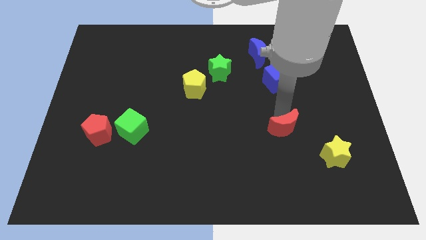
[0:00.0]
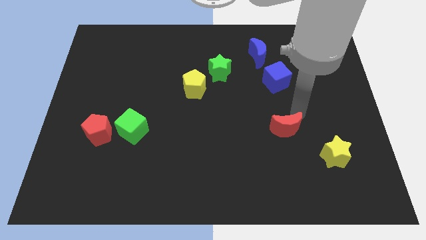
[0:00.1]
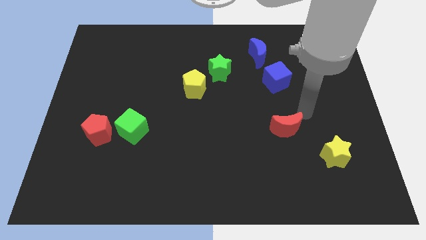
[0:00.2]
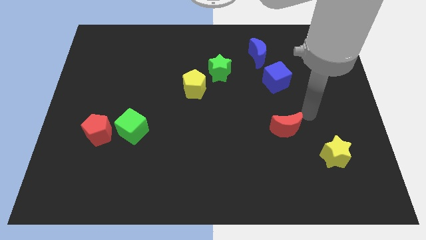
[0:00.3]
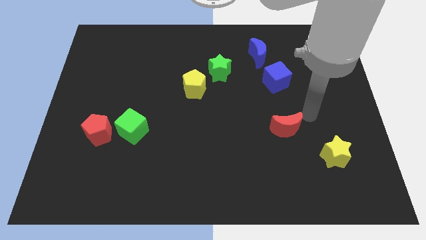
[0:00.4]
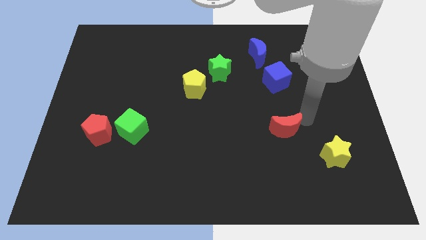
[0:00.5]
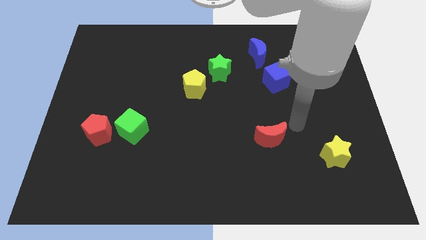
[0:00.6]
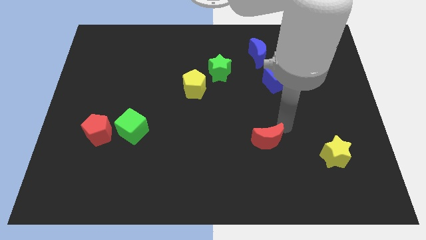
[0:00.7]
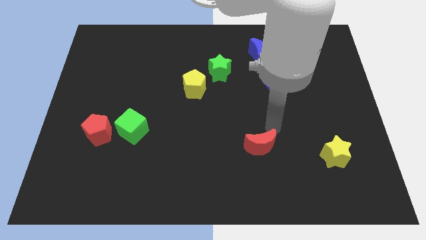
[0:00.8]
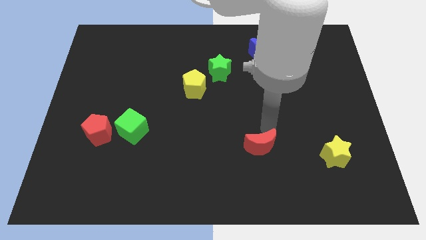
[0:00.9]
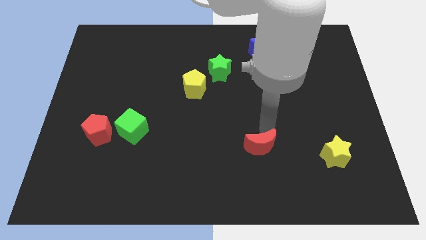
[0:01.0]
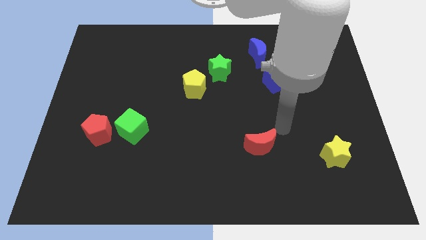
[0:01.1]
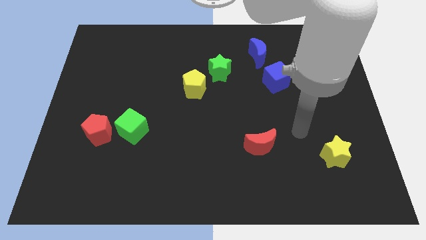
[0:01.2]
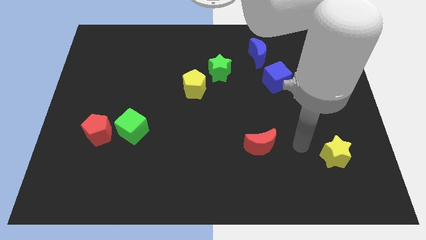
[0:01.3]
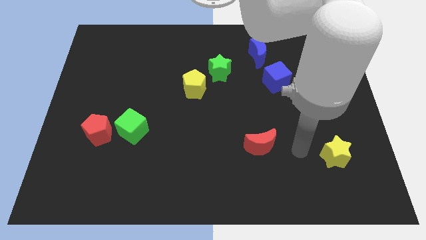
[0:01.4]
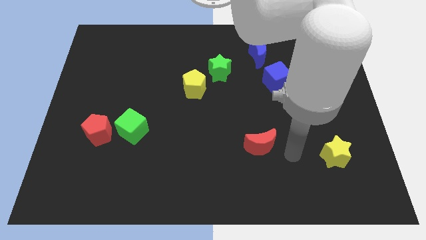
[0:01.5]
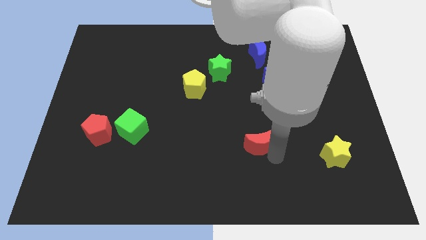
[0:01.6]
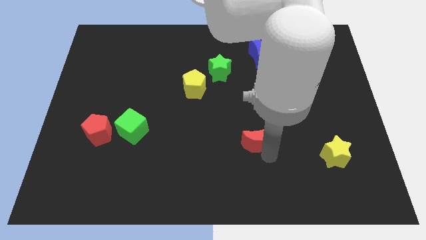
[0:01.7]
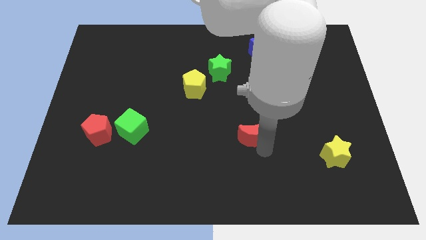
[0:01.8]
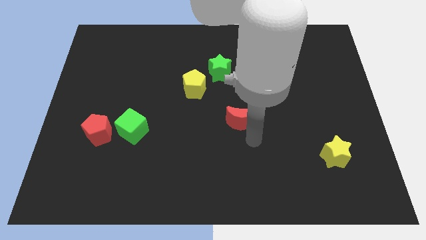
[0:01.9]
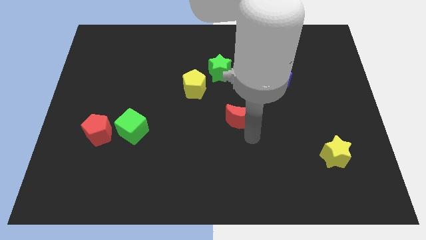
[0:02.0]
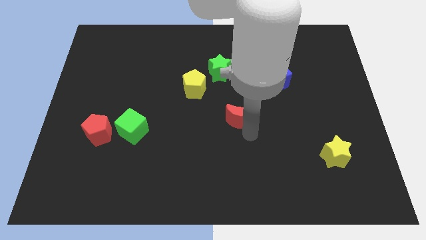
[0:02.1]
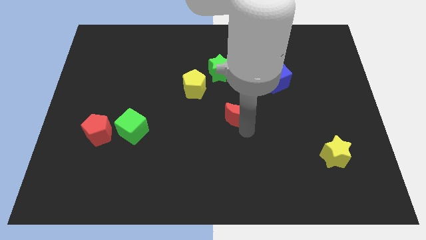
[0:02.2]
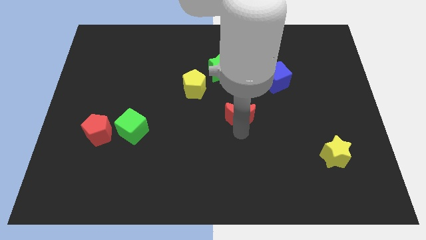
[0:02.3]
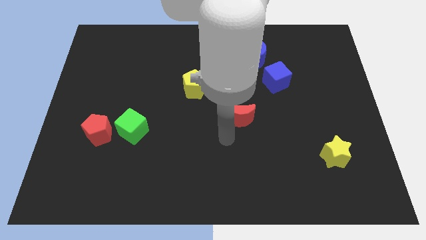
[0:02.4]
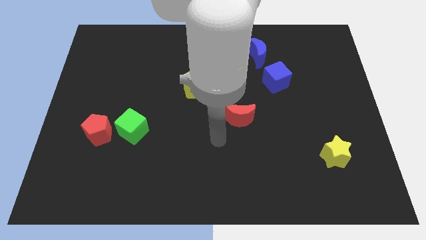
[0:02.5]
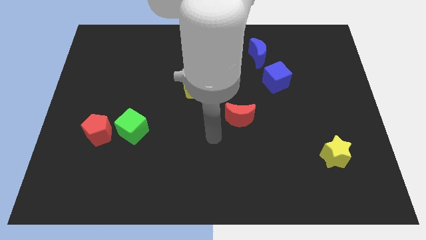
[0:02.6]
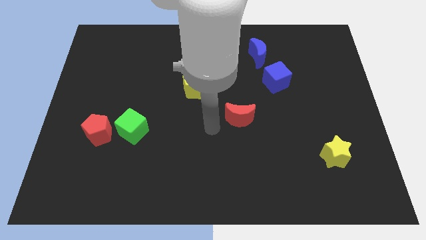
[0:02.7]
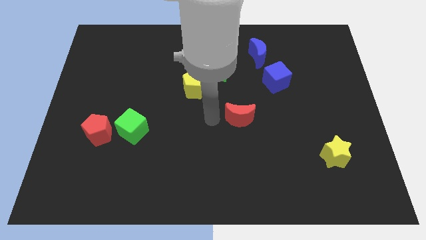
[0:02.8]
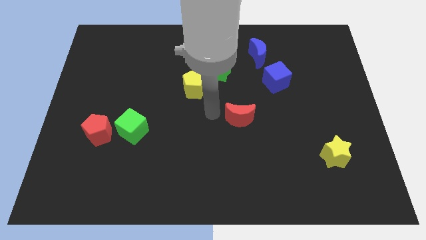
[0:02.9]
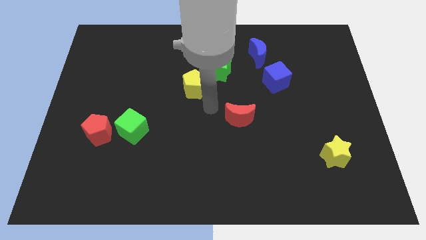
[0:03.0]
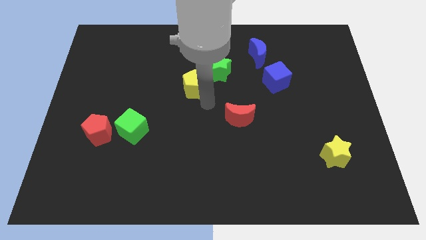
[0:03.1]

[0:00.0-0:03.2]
touch the bottom side of the yellow pentagon

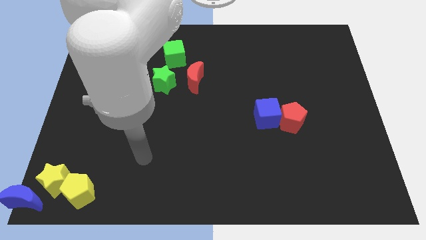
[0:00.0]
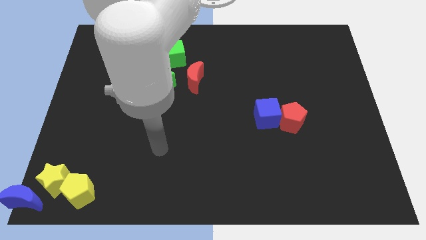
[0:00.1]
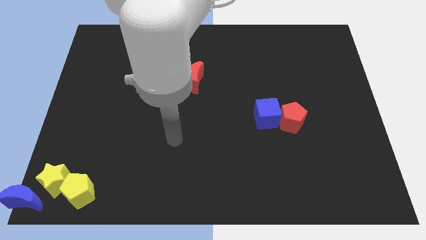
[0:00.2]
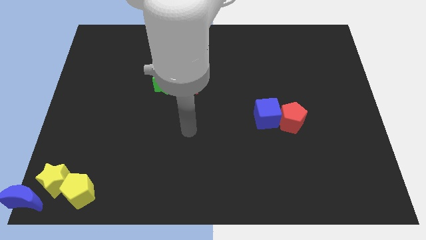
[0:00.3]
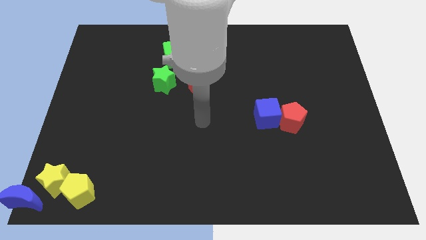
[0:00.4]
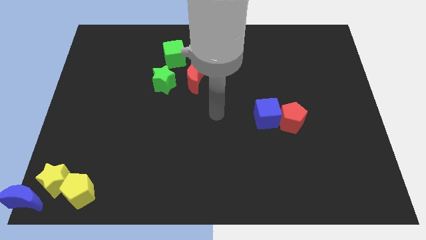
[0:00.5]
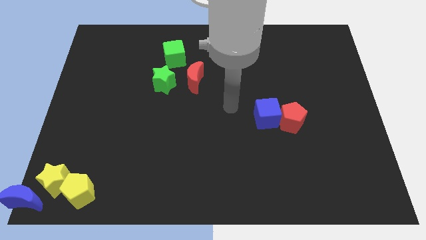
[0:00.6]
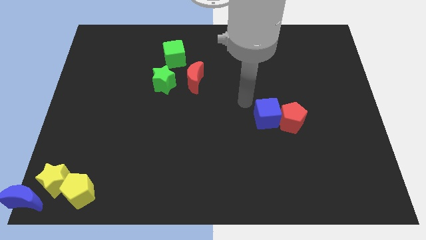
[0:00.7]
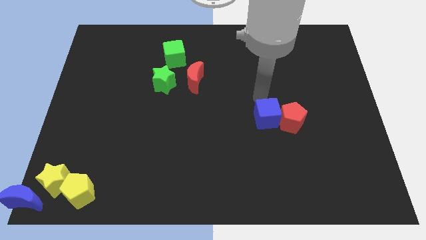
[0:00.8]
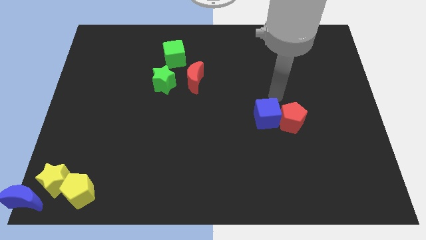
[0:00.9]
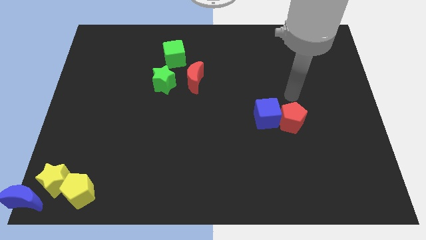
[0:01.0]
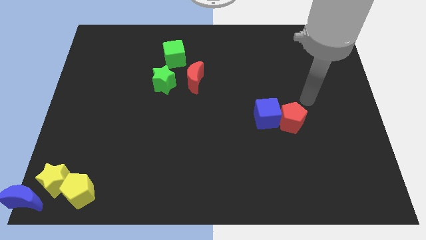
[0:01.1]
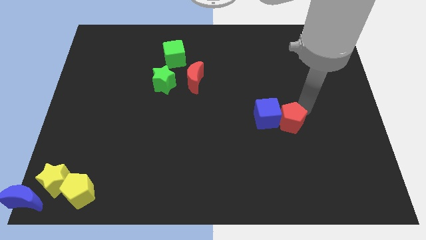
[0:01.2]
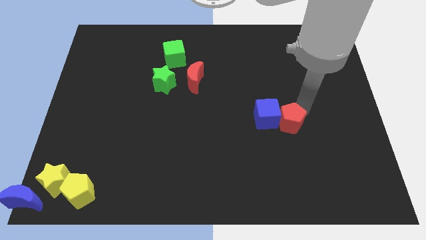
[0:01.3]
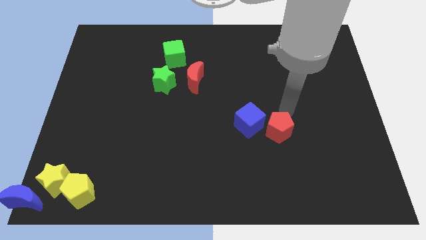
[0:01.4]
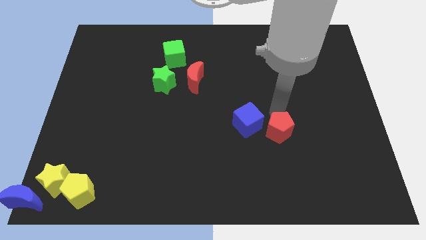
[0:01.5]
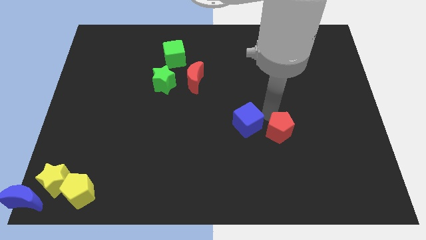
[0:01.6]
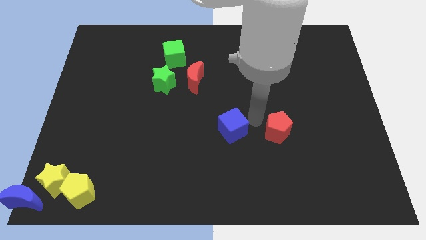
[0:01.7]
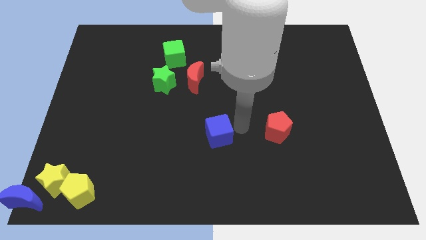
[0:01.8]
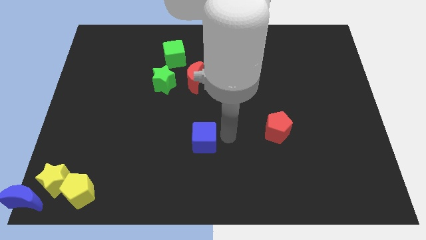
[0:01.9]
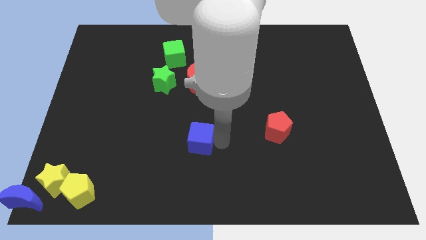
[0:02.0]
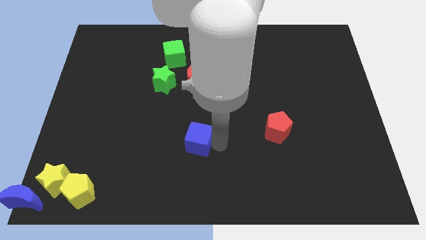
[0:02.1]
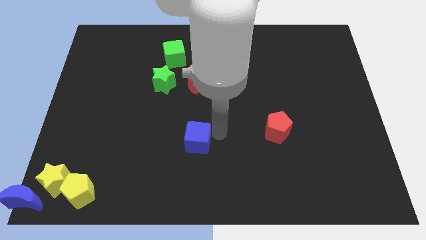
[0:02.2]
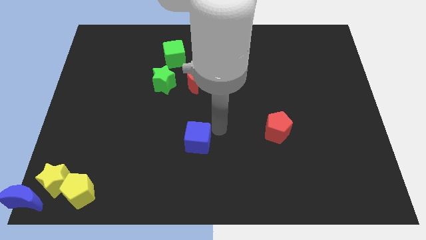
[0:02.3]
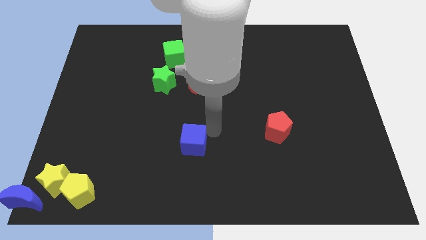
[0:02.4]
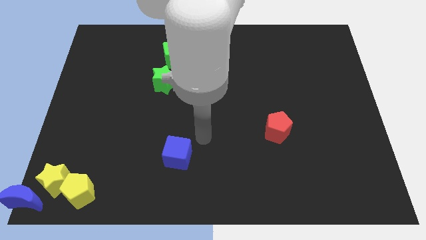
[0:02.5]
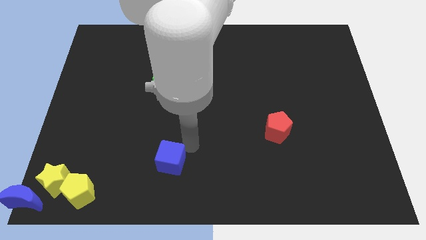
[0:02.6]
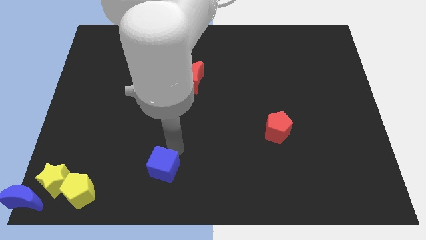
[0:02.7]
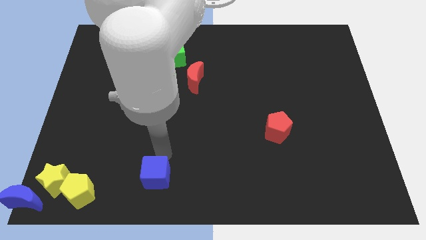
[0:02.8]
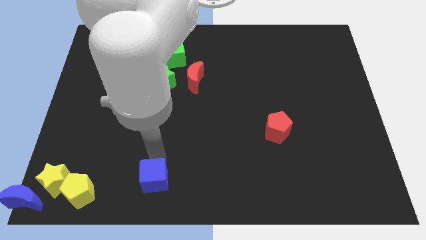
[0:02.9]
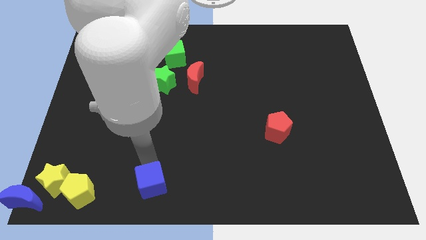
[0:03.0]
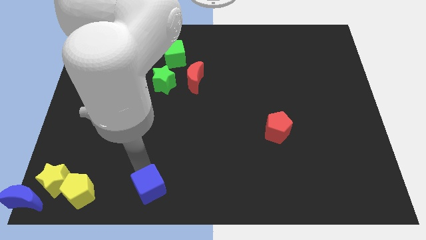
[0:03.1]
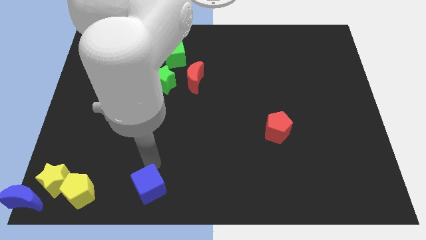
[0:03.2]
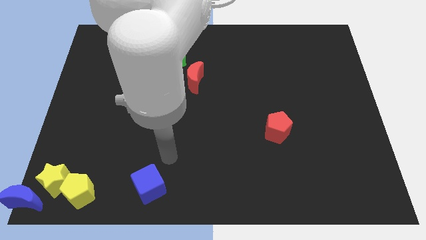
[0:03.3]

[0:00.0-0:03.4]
separate the blue cube from the red pentagon

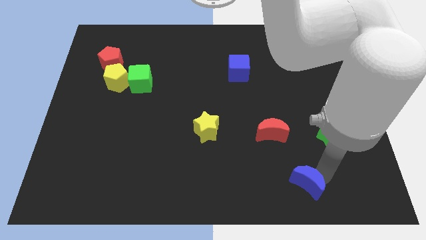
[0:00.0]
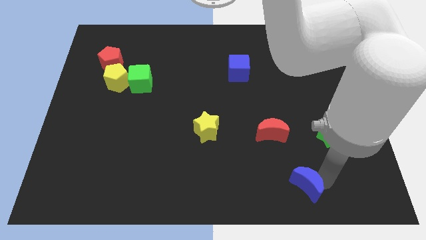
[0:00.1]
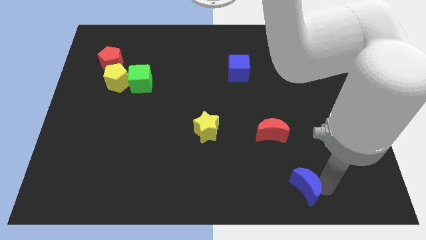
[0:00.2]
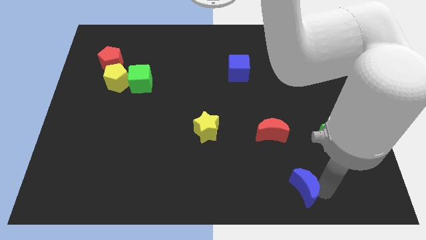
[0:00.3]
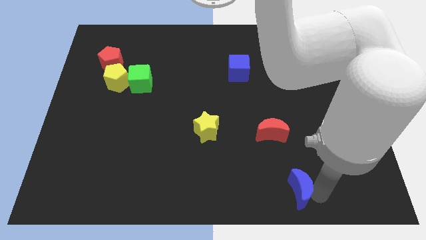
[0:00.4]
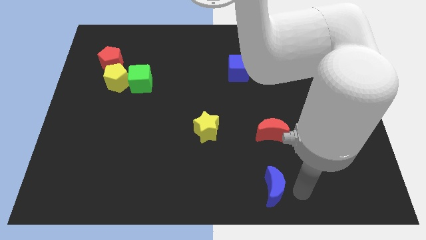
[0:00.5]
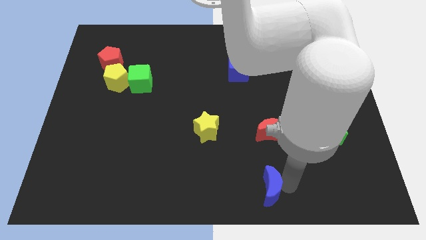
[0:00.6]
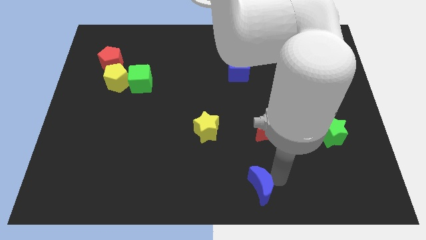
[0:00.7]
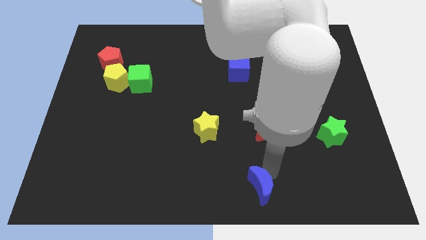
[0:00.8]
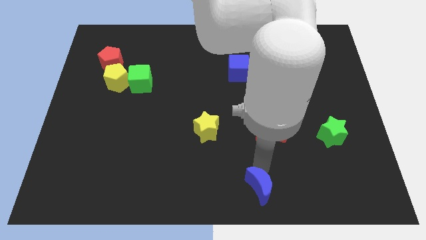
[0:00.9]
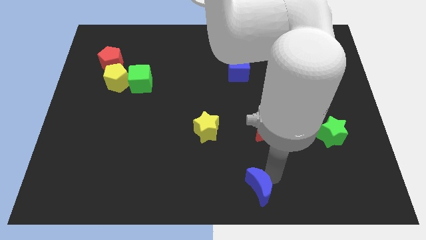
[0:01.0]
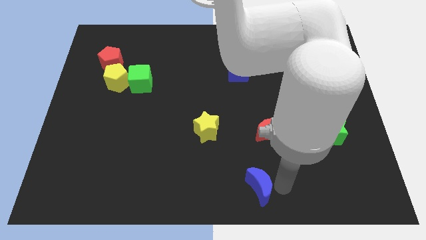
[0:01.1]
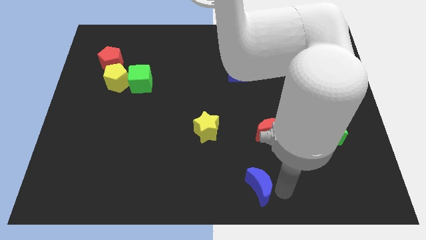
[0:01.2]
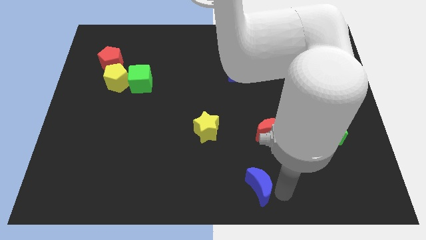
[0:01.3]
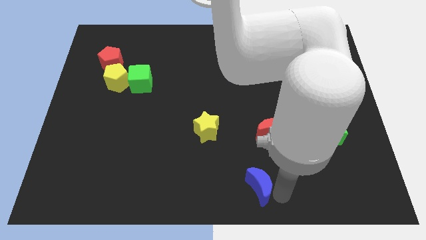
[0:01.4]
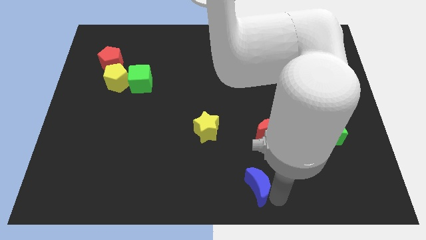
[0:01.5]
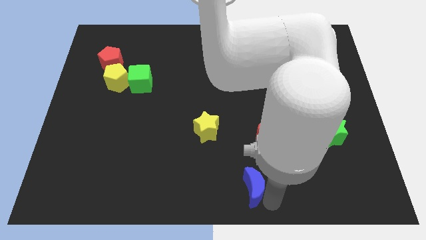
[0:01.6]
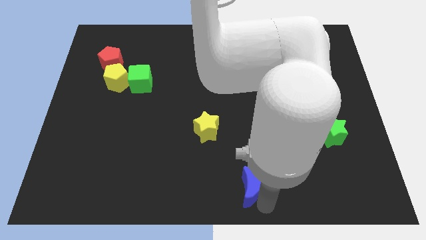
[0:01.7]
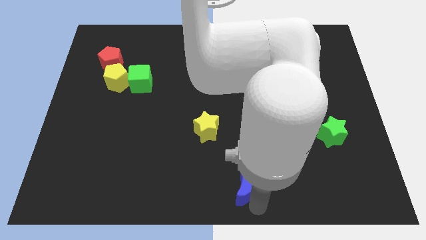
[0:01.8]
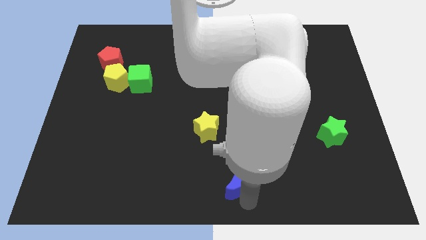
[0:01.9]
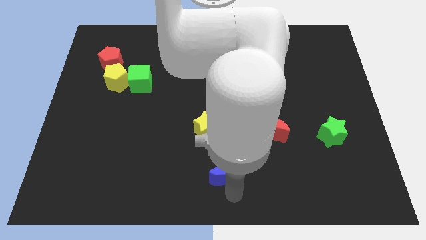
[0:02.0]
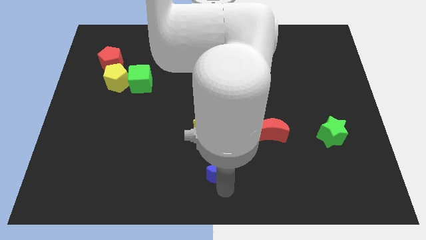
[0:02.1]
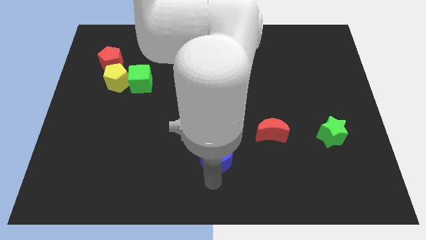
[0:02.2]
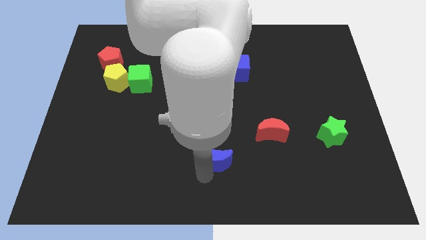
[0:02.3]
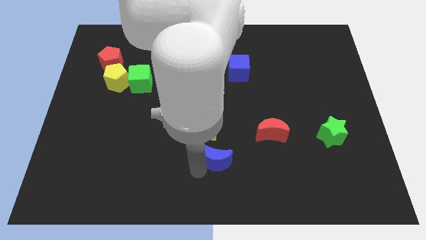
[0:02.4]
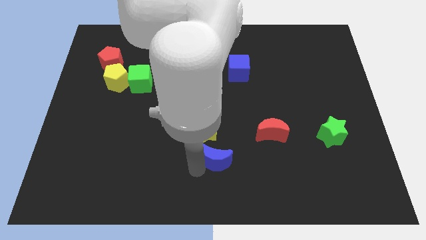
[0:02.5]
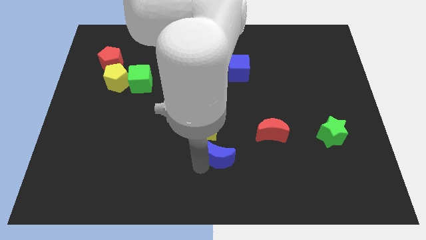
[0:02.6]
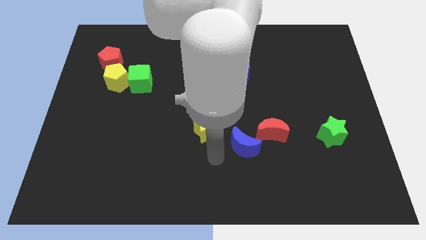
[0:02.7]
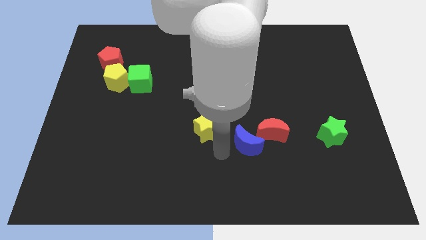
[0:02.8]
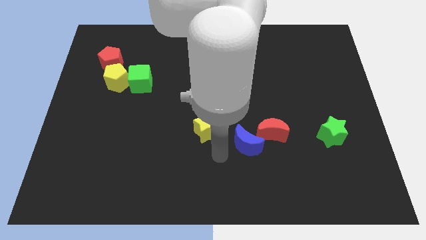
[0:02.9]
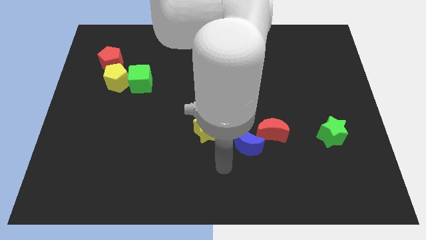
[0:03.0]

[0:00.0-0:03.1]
push blue moon towards red moon
